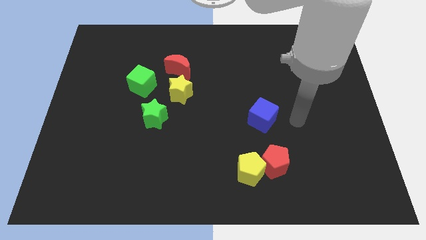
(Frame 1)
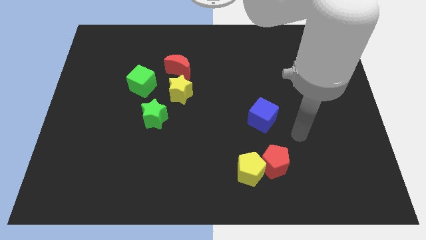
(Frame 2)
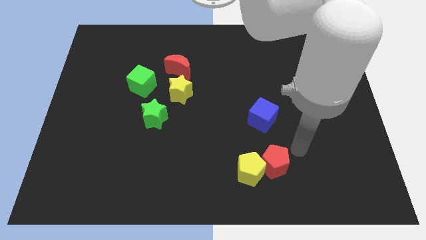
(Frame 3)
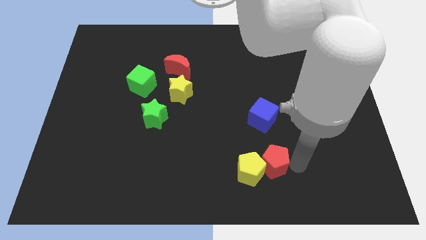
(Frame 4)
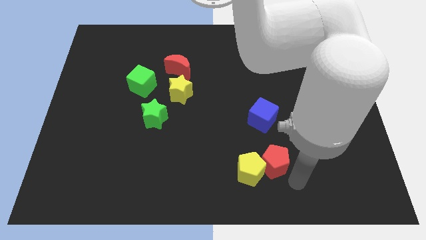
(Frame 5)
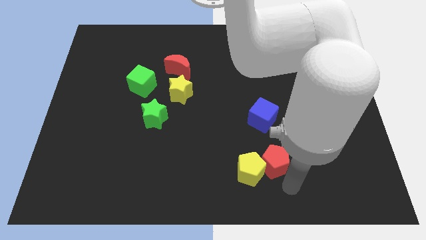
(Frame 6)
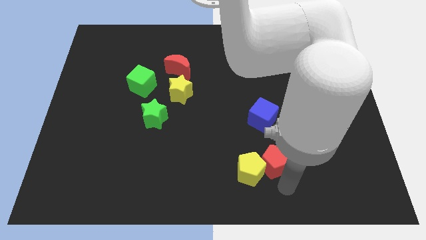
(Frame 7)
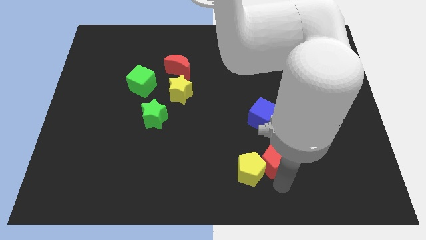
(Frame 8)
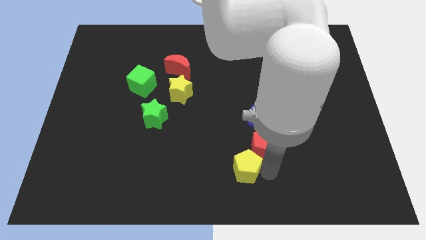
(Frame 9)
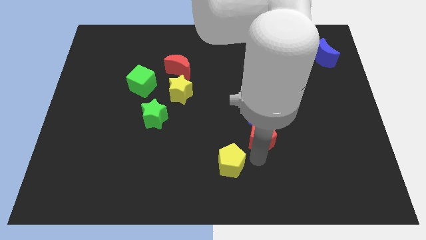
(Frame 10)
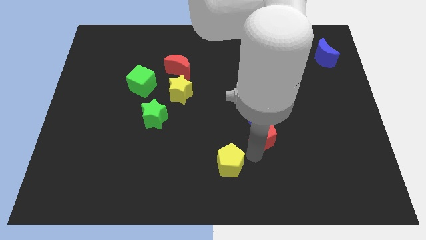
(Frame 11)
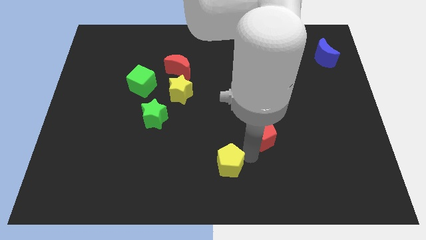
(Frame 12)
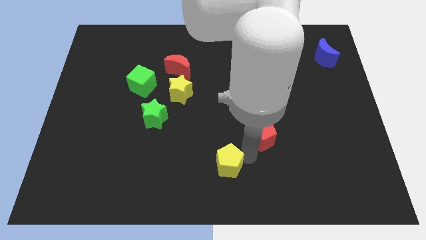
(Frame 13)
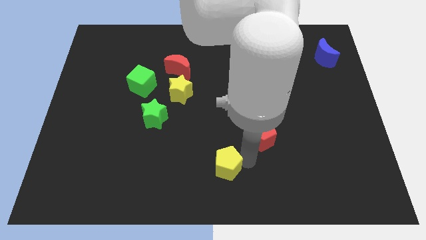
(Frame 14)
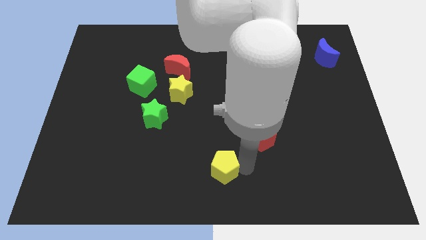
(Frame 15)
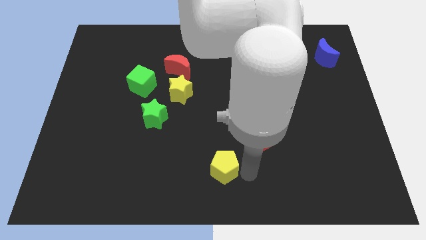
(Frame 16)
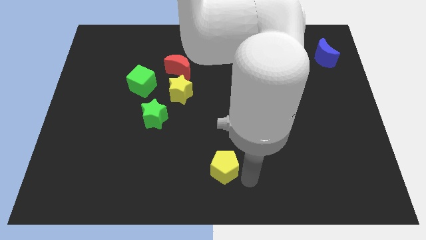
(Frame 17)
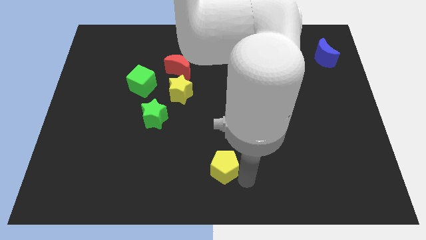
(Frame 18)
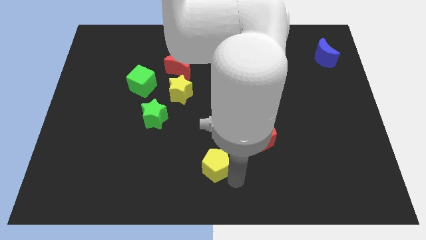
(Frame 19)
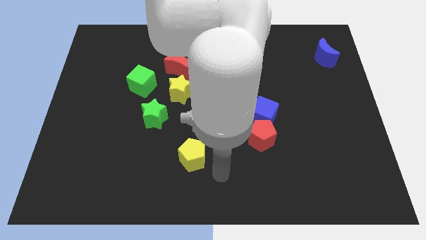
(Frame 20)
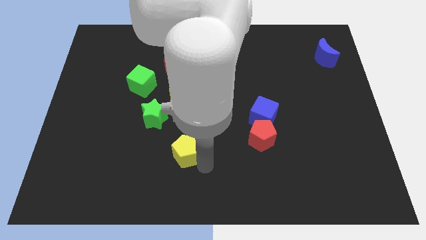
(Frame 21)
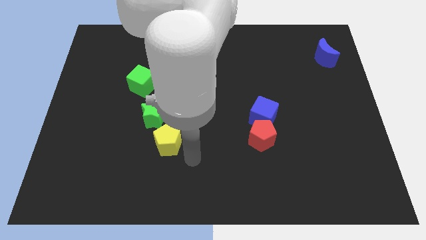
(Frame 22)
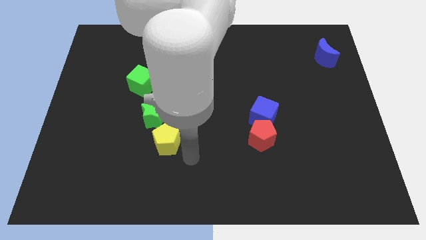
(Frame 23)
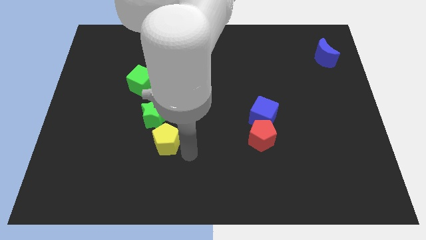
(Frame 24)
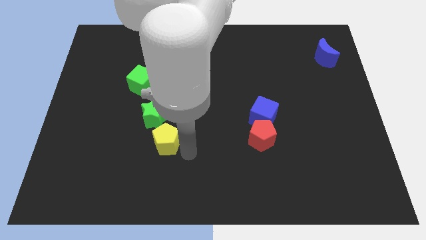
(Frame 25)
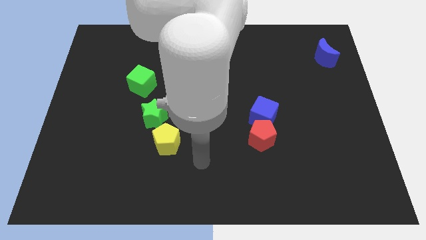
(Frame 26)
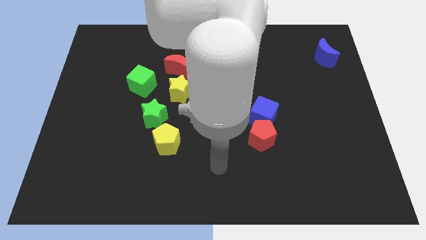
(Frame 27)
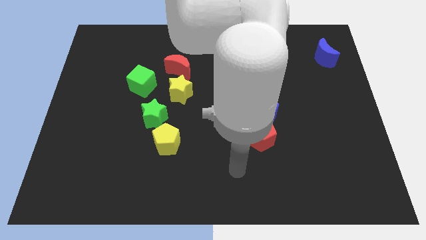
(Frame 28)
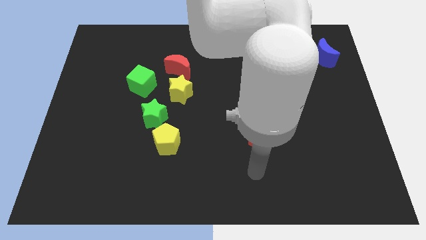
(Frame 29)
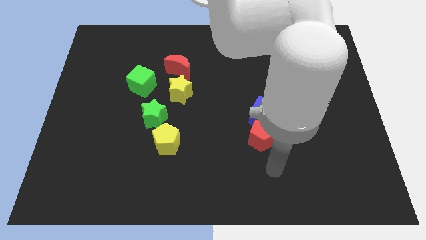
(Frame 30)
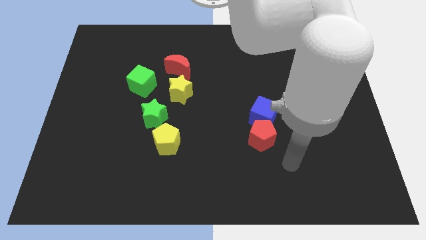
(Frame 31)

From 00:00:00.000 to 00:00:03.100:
separate yellow pentagon from red pentagon

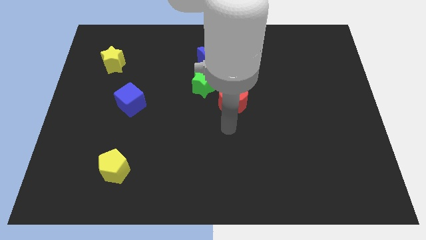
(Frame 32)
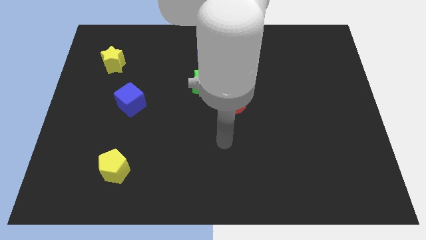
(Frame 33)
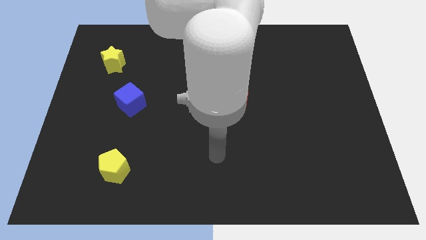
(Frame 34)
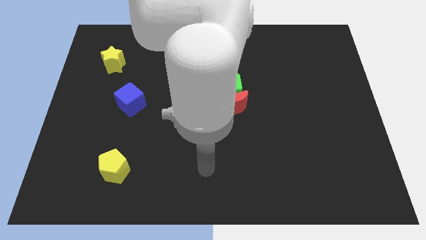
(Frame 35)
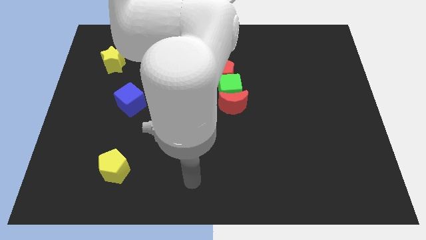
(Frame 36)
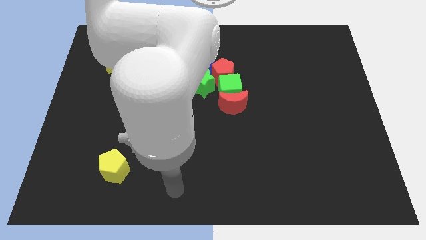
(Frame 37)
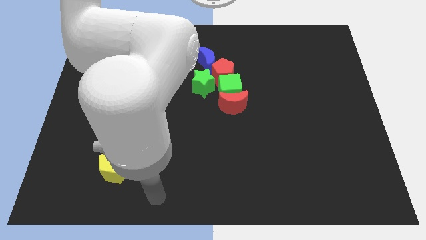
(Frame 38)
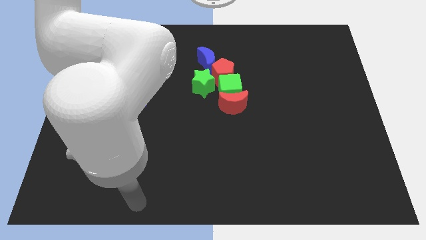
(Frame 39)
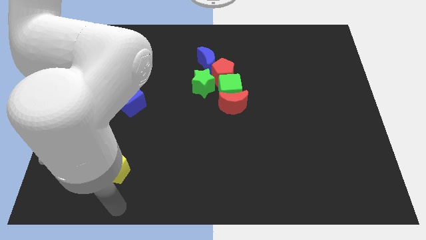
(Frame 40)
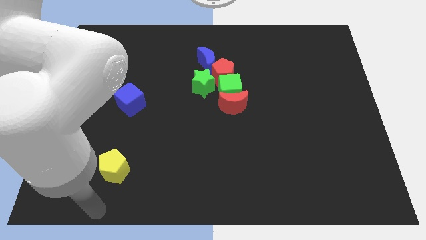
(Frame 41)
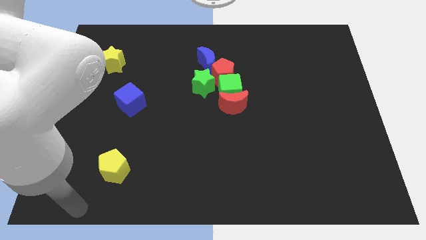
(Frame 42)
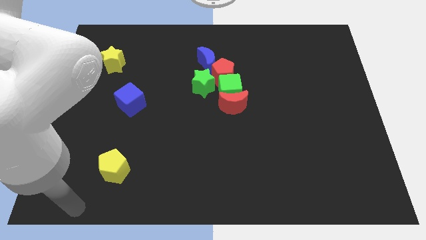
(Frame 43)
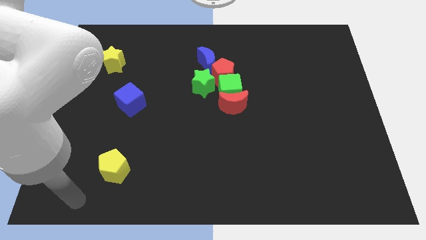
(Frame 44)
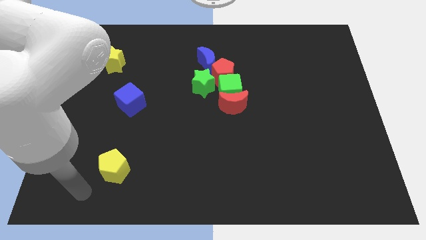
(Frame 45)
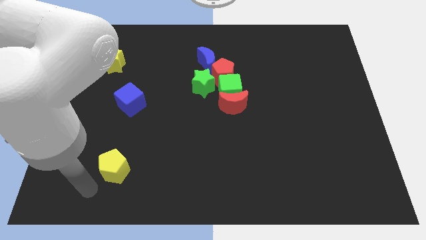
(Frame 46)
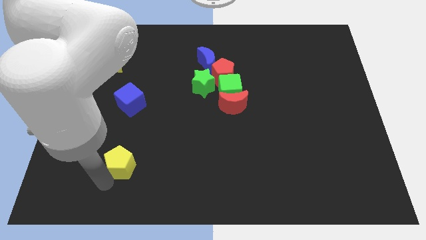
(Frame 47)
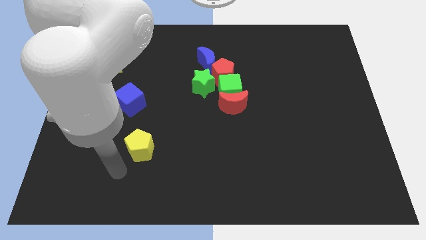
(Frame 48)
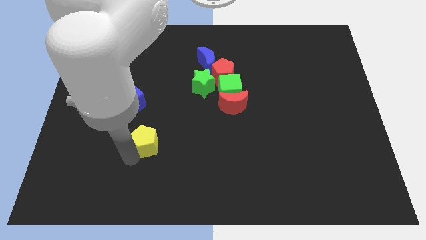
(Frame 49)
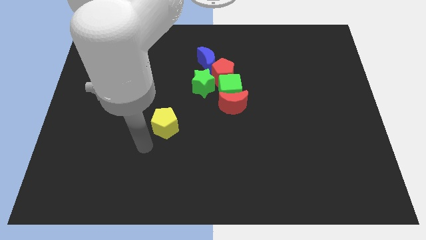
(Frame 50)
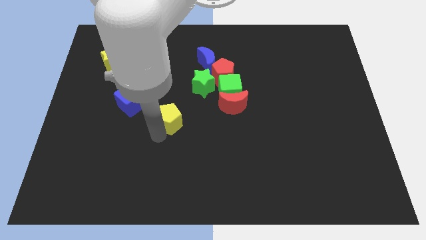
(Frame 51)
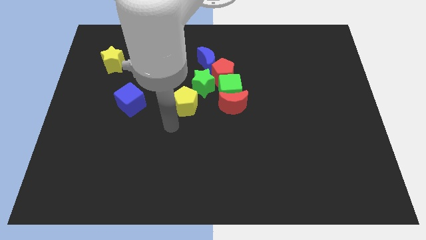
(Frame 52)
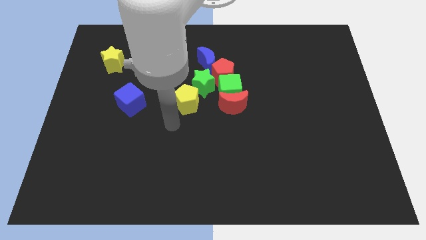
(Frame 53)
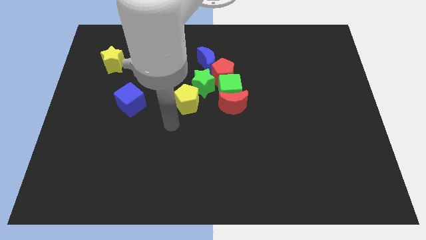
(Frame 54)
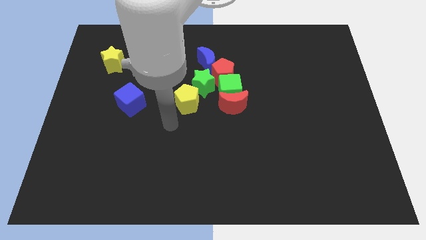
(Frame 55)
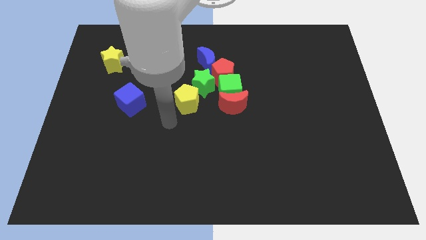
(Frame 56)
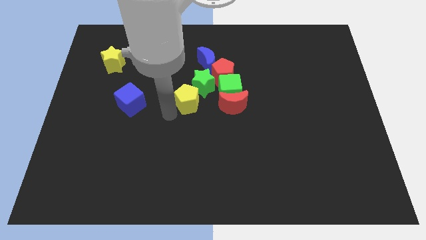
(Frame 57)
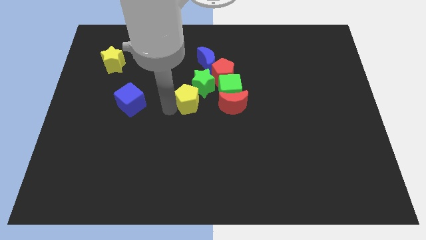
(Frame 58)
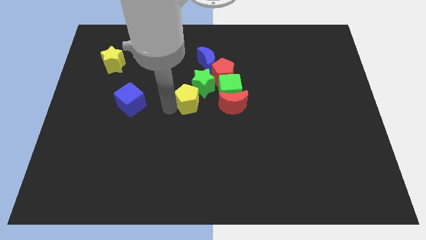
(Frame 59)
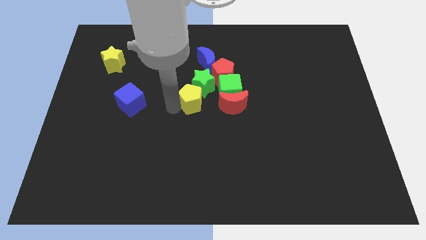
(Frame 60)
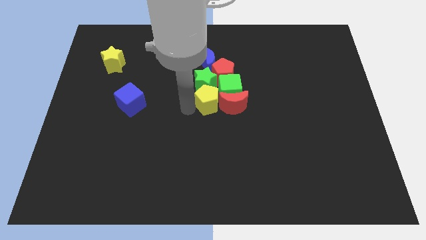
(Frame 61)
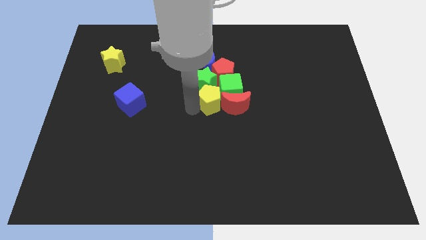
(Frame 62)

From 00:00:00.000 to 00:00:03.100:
place the yellow pentagon in between the red moon and blue cube

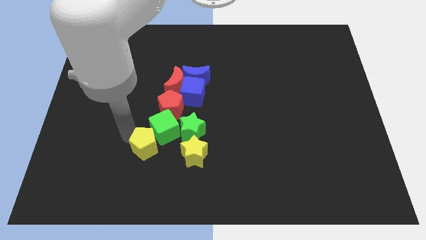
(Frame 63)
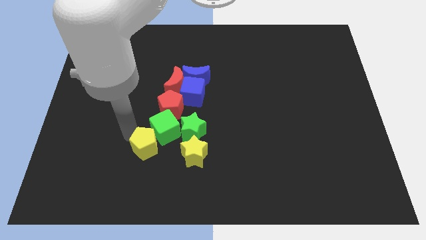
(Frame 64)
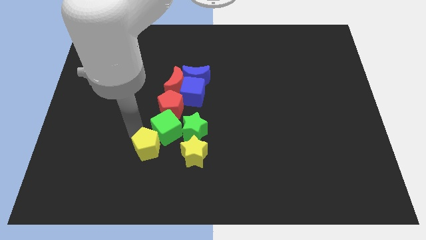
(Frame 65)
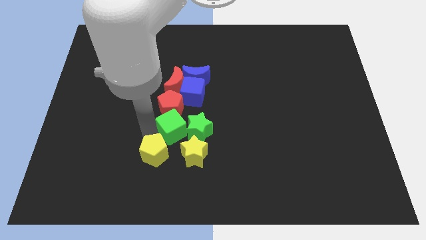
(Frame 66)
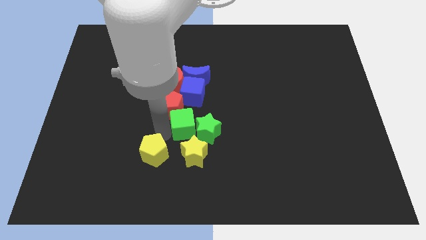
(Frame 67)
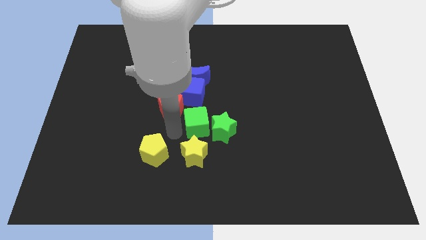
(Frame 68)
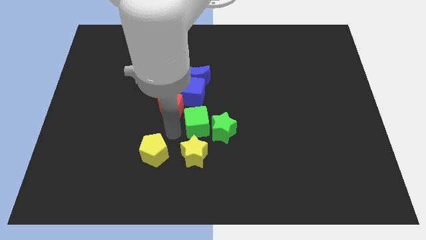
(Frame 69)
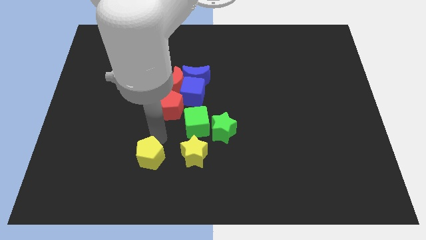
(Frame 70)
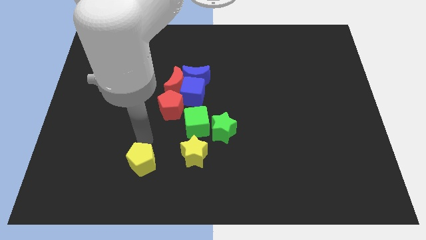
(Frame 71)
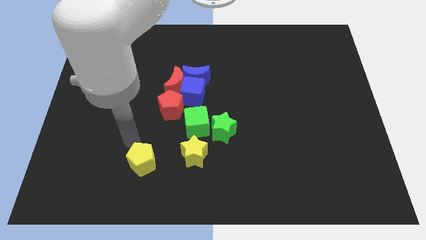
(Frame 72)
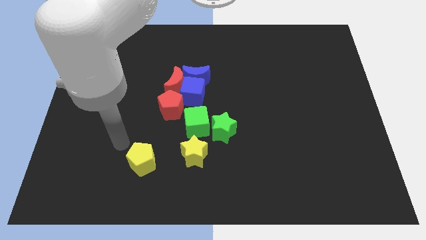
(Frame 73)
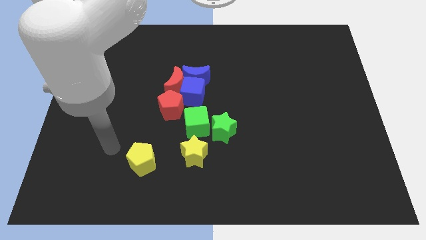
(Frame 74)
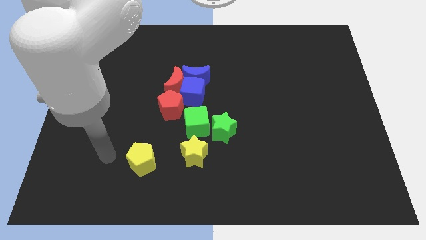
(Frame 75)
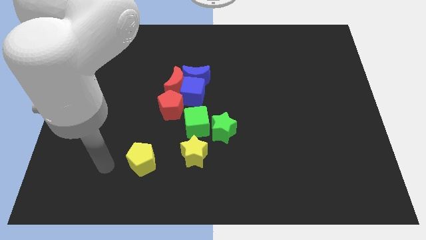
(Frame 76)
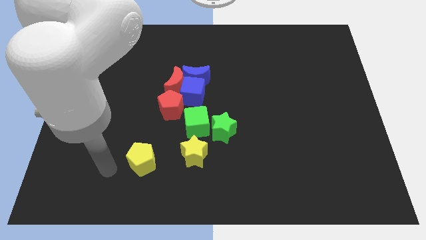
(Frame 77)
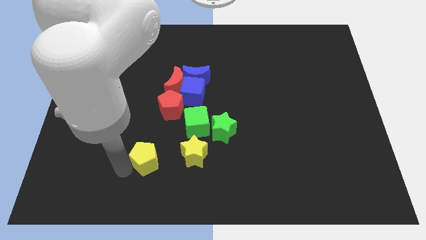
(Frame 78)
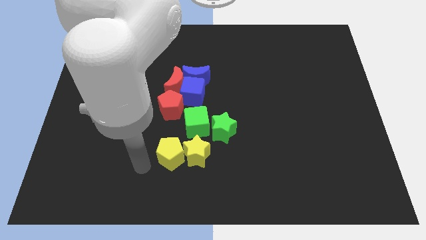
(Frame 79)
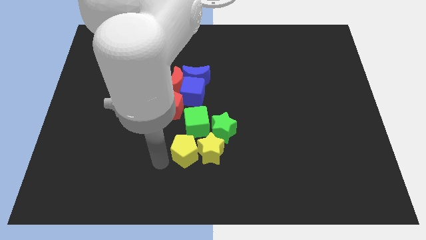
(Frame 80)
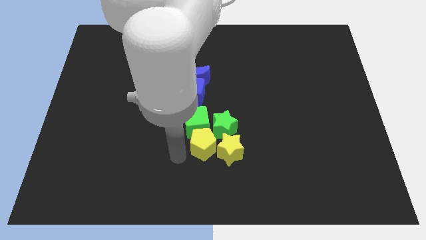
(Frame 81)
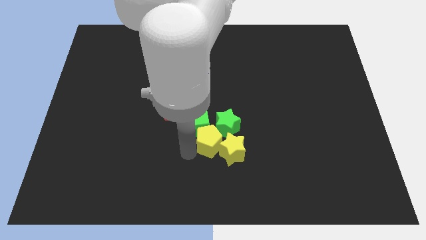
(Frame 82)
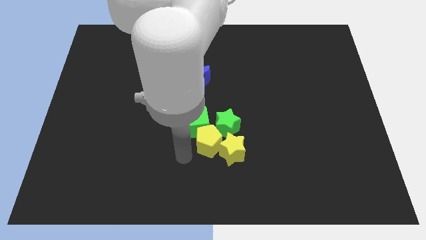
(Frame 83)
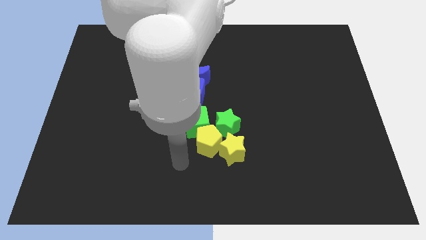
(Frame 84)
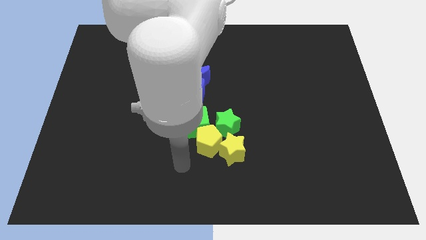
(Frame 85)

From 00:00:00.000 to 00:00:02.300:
move the yellow penatgon to the left of the yellow star

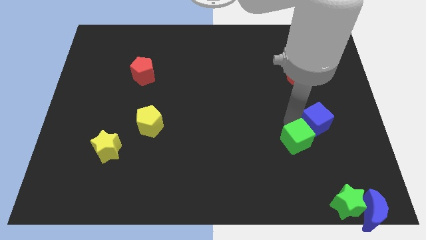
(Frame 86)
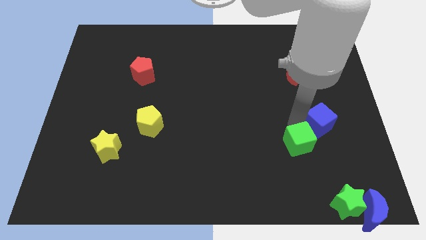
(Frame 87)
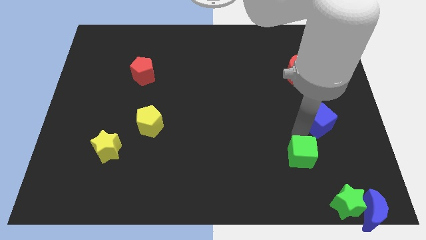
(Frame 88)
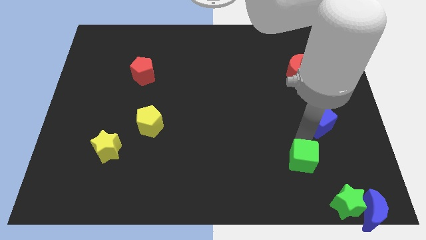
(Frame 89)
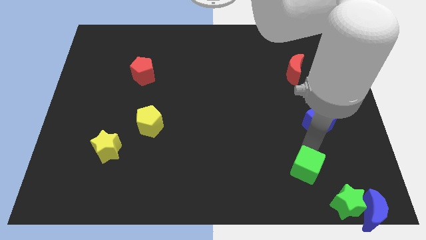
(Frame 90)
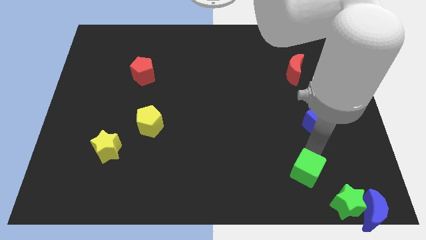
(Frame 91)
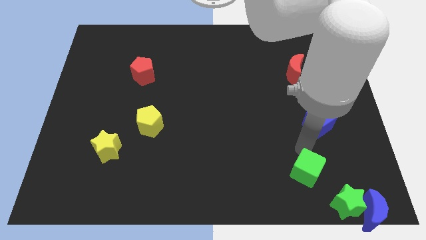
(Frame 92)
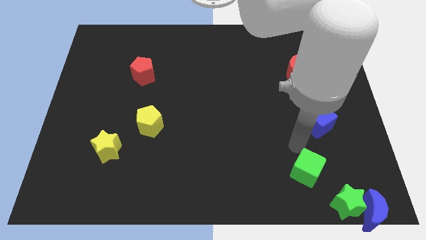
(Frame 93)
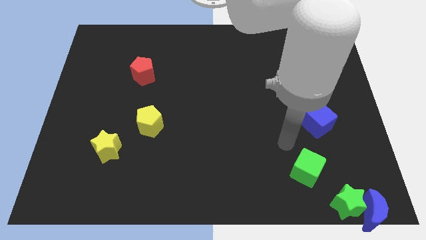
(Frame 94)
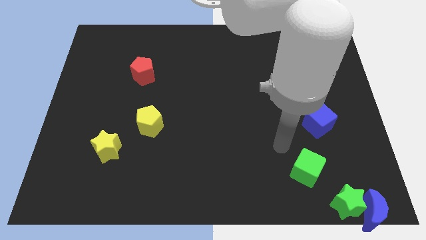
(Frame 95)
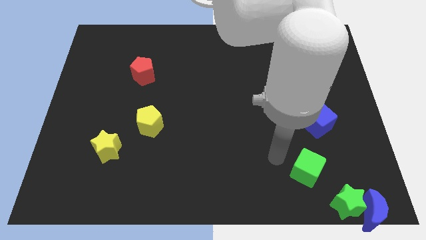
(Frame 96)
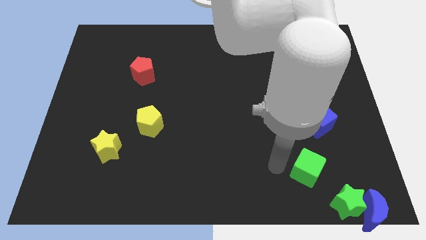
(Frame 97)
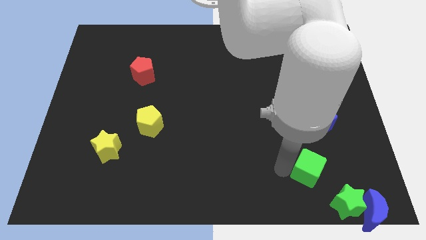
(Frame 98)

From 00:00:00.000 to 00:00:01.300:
place the green cube diagonally top left of green star
